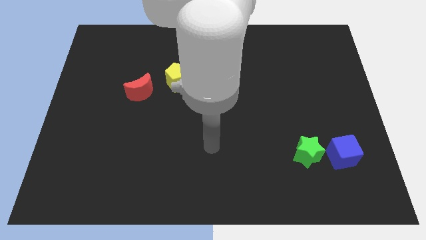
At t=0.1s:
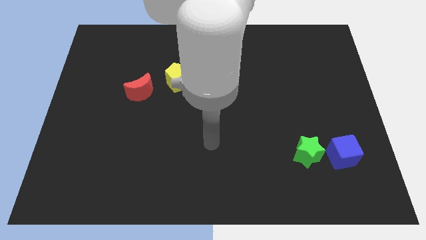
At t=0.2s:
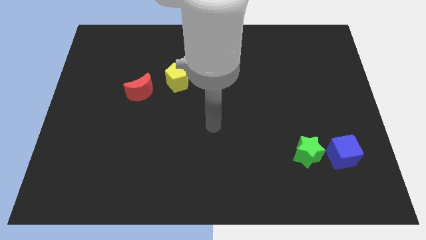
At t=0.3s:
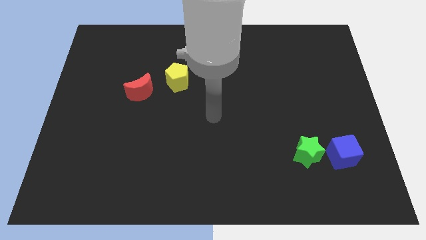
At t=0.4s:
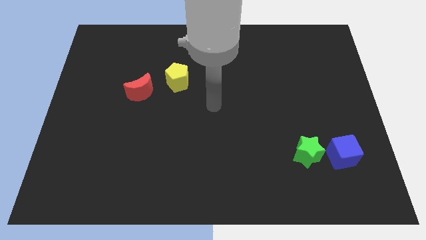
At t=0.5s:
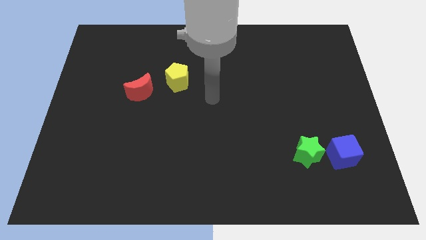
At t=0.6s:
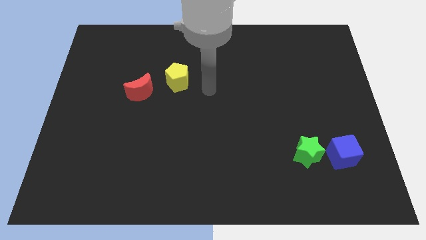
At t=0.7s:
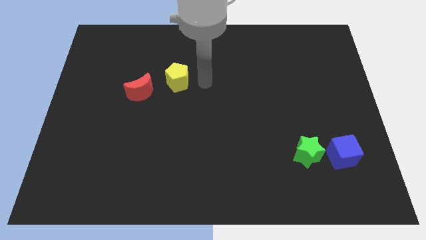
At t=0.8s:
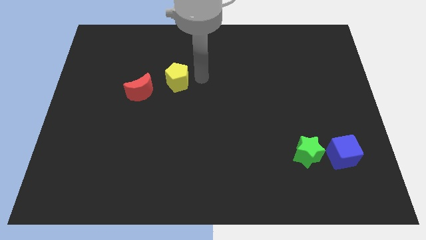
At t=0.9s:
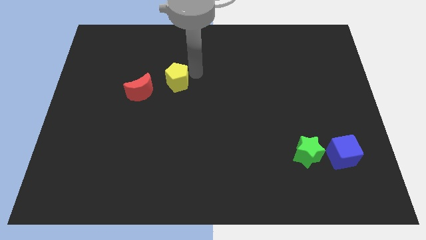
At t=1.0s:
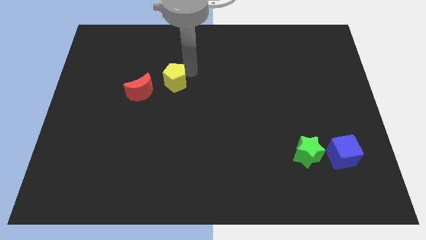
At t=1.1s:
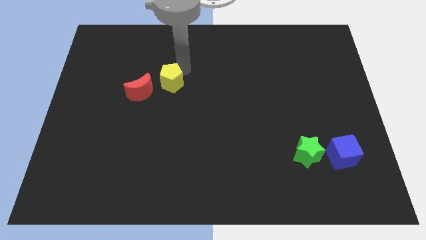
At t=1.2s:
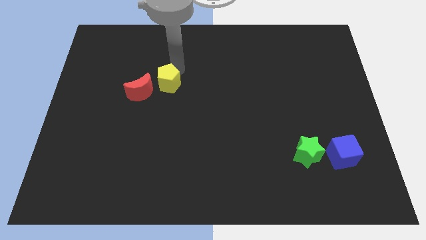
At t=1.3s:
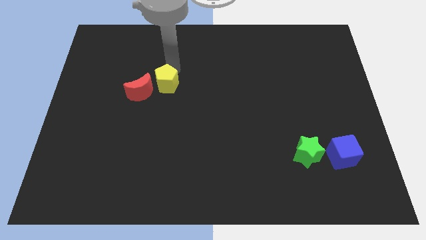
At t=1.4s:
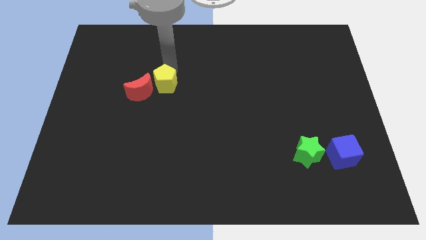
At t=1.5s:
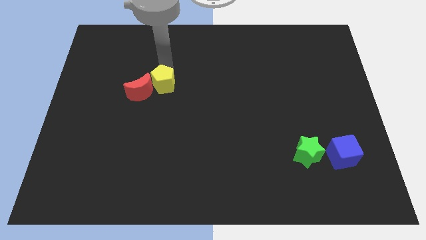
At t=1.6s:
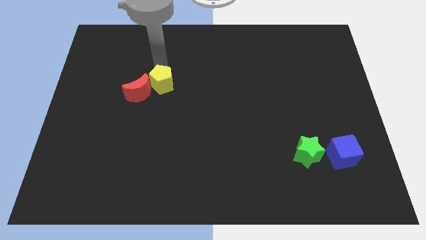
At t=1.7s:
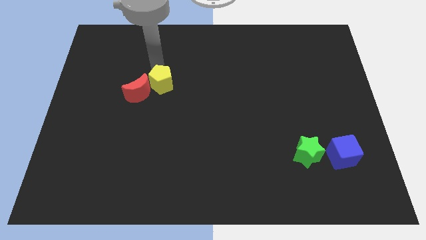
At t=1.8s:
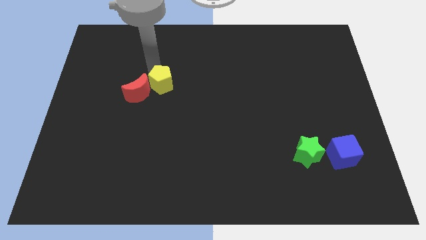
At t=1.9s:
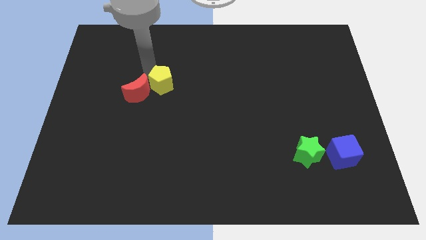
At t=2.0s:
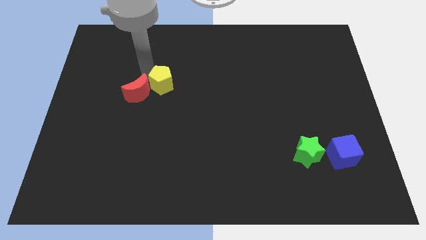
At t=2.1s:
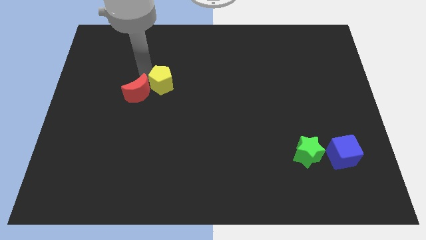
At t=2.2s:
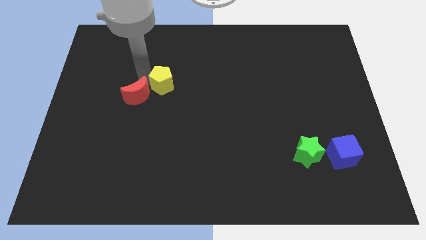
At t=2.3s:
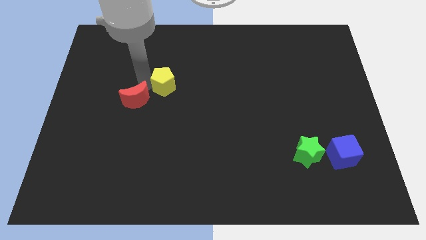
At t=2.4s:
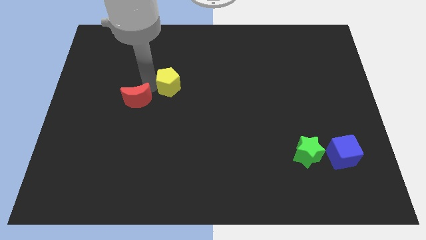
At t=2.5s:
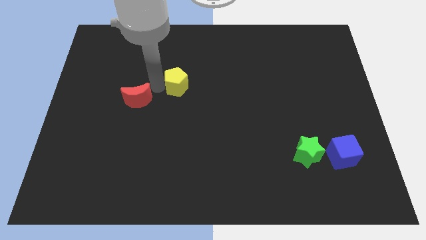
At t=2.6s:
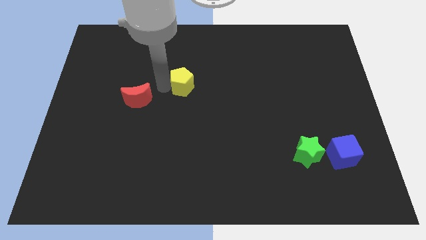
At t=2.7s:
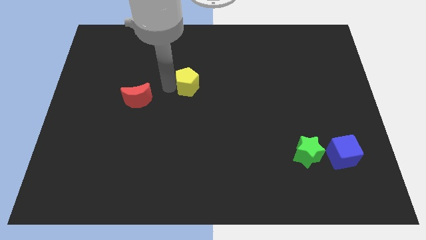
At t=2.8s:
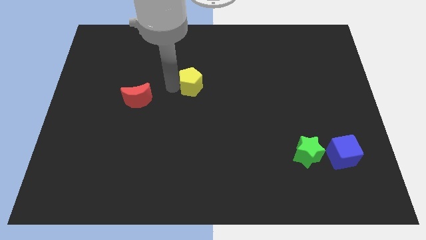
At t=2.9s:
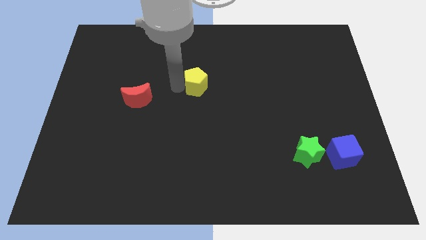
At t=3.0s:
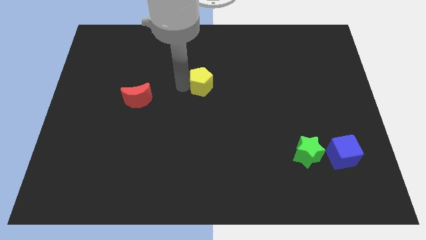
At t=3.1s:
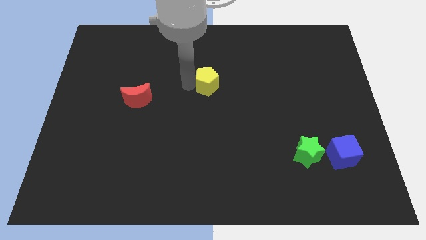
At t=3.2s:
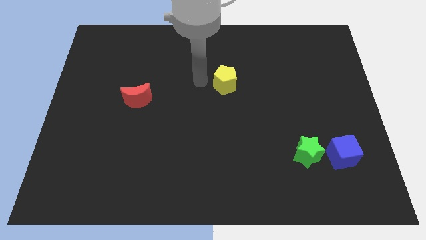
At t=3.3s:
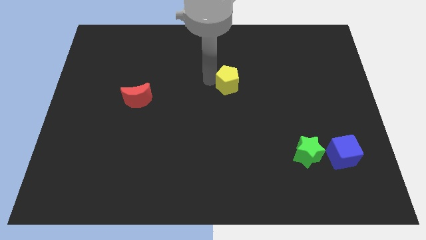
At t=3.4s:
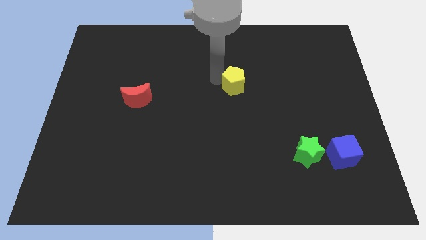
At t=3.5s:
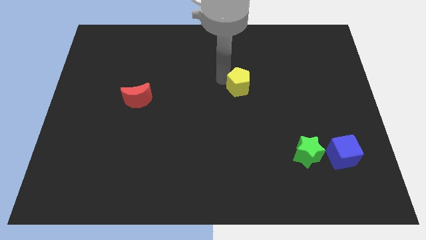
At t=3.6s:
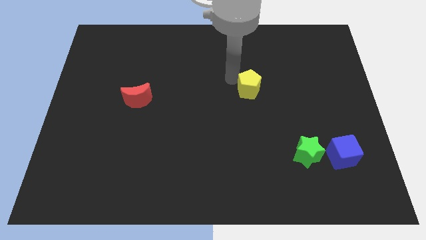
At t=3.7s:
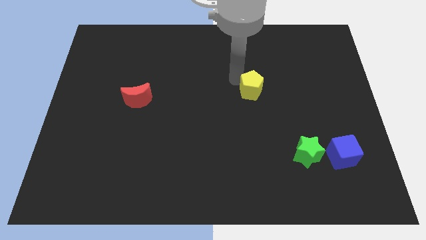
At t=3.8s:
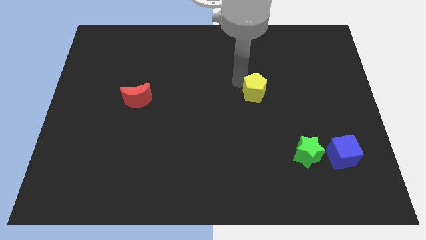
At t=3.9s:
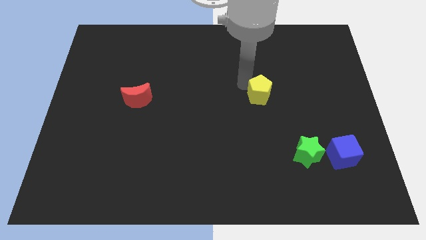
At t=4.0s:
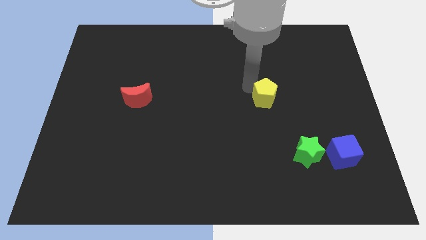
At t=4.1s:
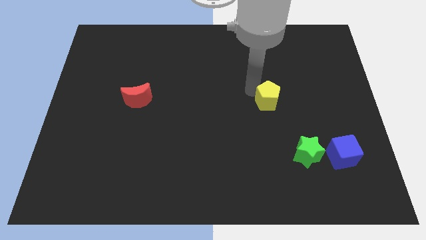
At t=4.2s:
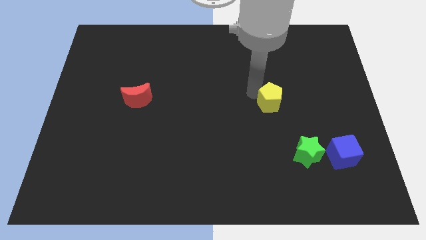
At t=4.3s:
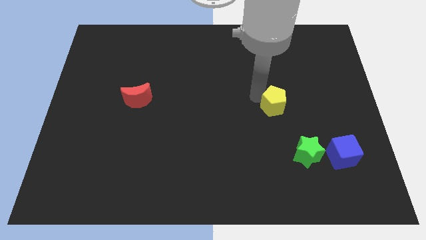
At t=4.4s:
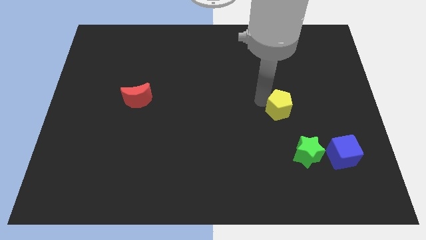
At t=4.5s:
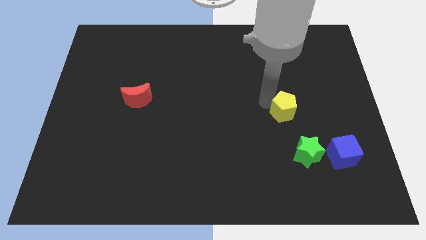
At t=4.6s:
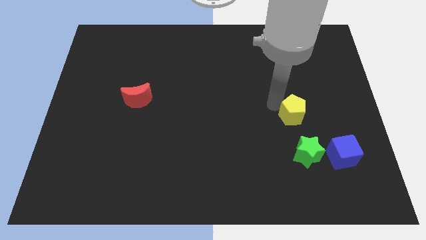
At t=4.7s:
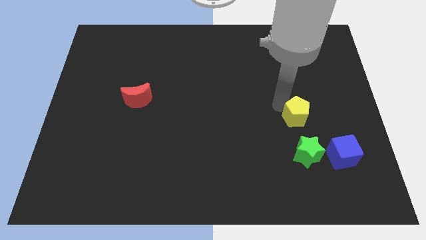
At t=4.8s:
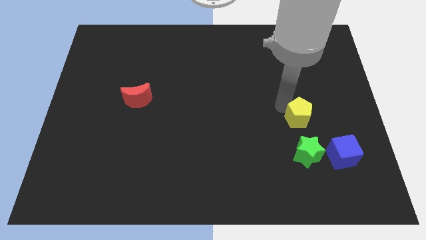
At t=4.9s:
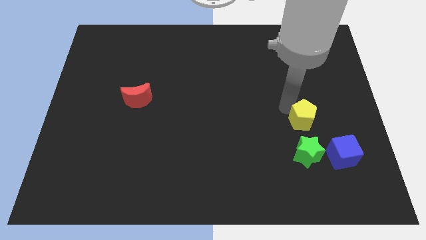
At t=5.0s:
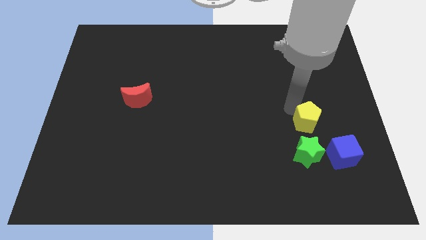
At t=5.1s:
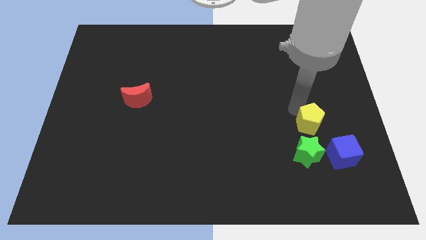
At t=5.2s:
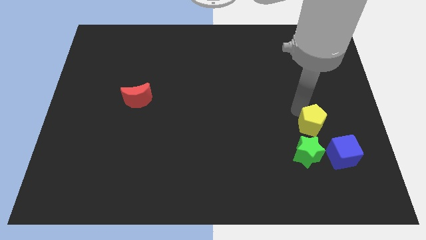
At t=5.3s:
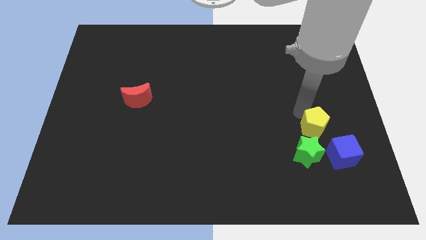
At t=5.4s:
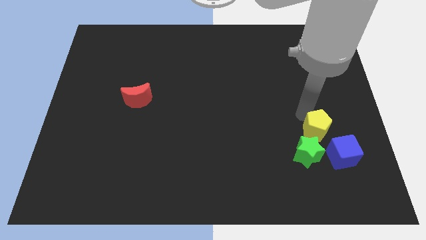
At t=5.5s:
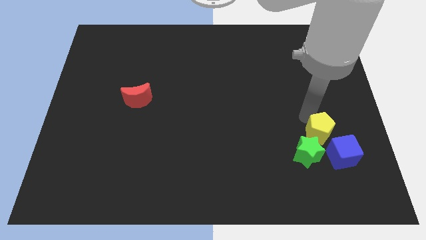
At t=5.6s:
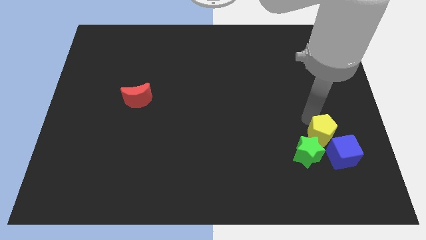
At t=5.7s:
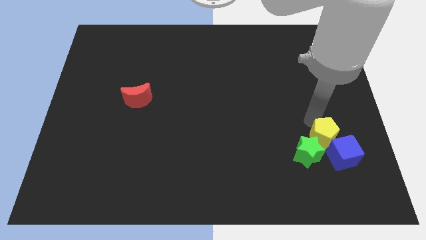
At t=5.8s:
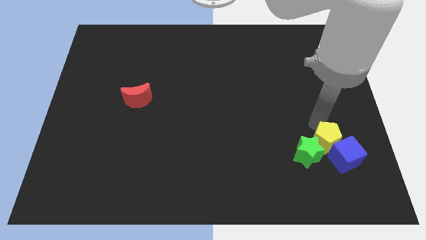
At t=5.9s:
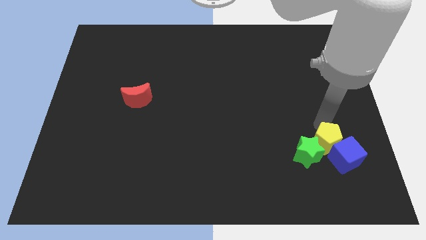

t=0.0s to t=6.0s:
push the pentagon close to the blue cube

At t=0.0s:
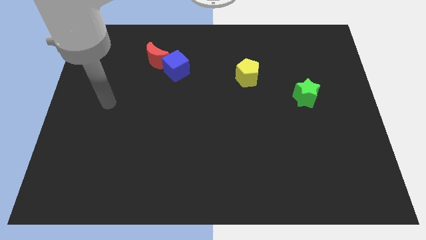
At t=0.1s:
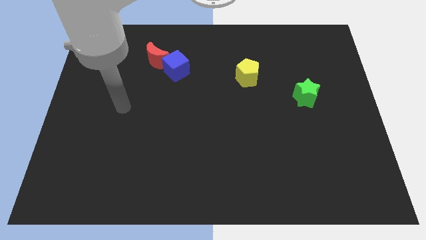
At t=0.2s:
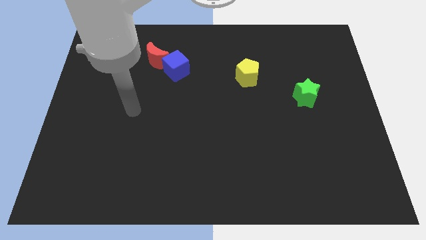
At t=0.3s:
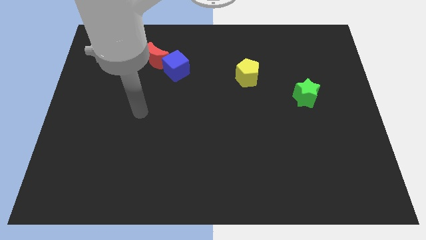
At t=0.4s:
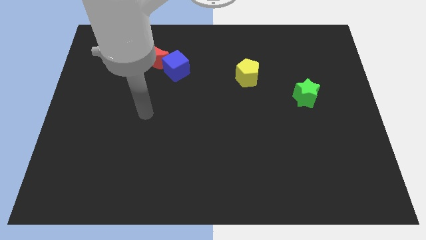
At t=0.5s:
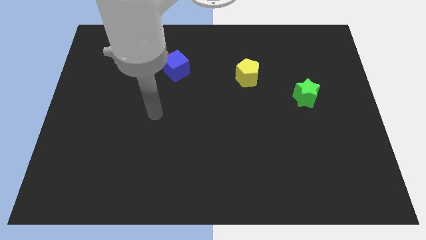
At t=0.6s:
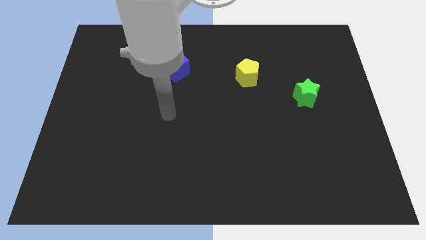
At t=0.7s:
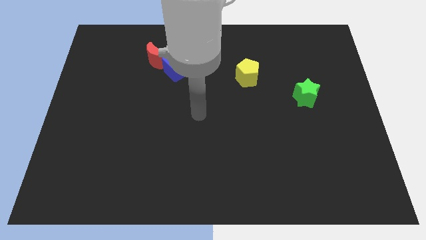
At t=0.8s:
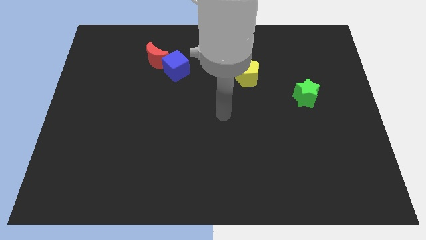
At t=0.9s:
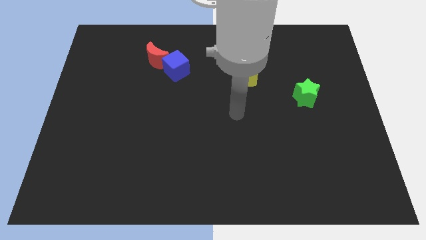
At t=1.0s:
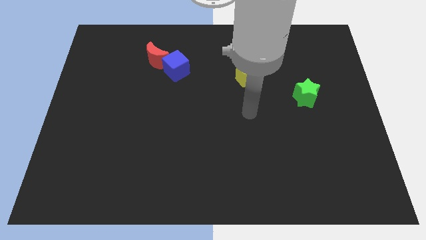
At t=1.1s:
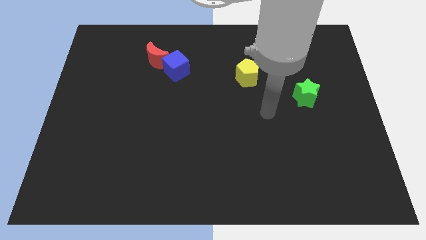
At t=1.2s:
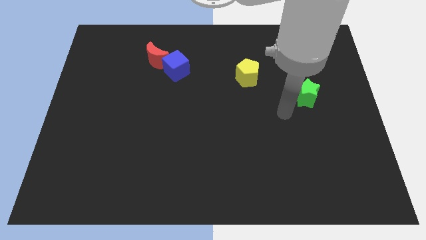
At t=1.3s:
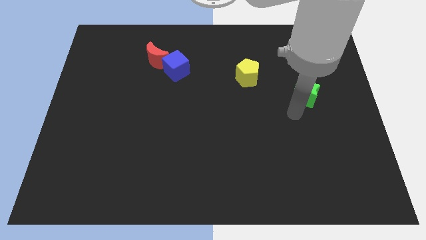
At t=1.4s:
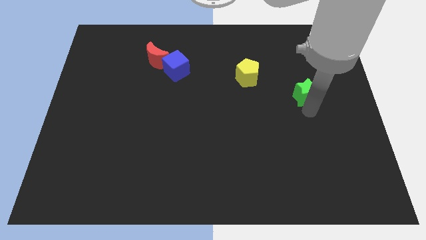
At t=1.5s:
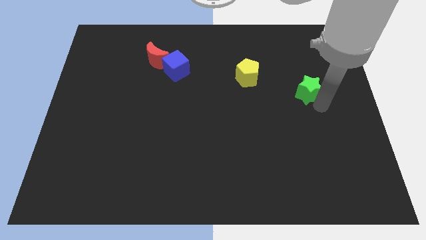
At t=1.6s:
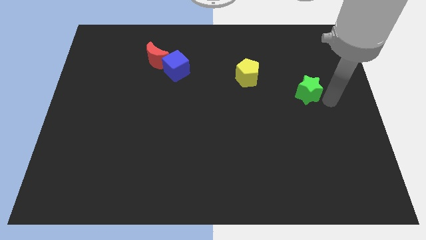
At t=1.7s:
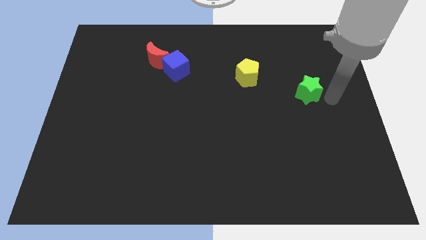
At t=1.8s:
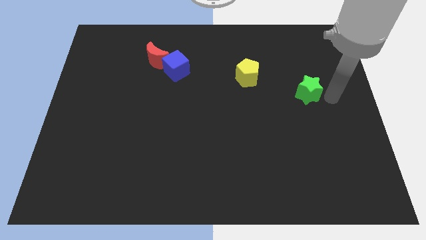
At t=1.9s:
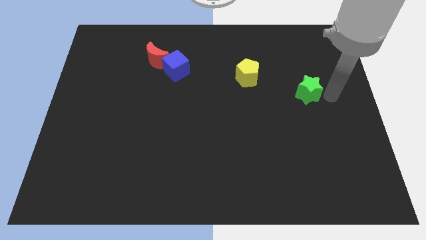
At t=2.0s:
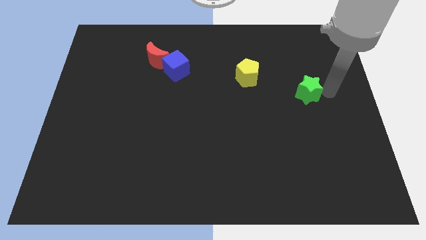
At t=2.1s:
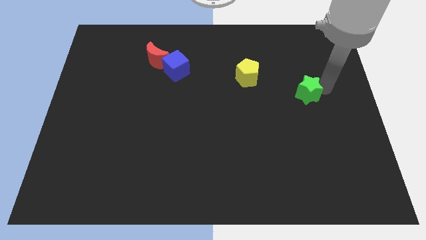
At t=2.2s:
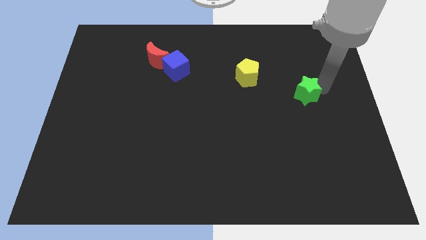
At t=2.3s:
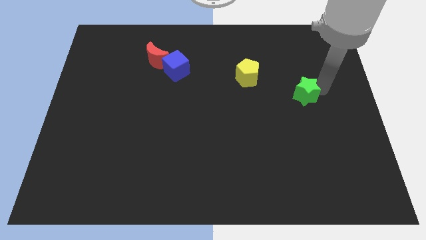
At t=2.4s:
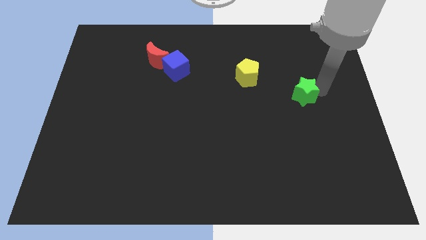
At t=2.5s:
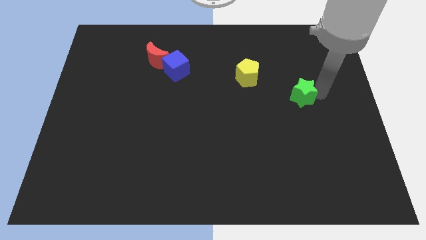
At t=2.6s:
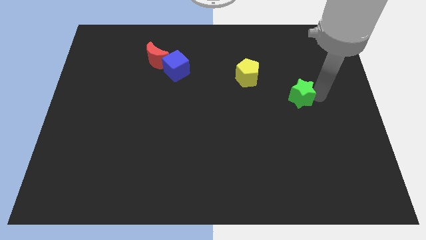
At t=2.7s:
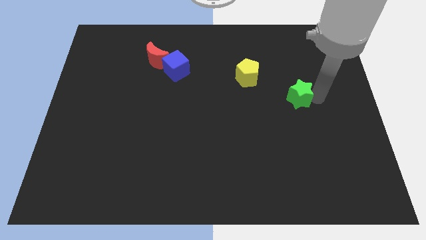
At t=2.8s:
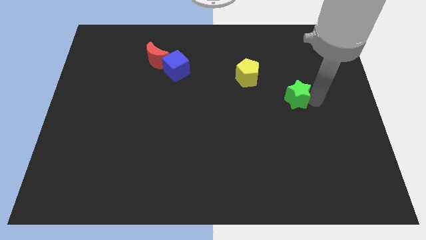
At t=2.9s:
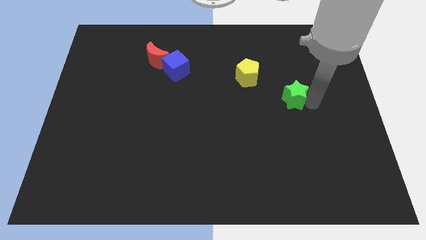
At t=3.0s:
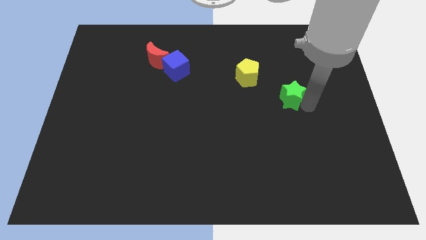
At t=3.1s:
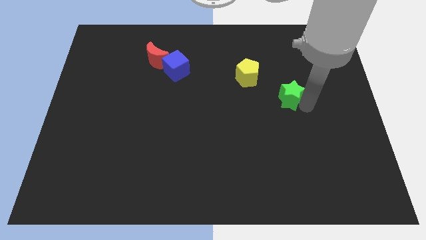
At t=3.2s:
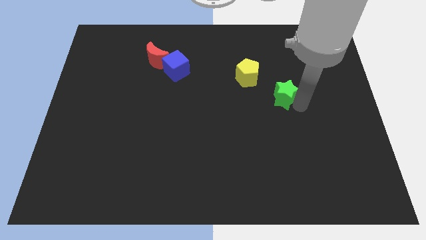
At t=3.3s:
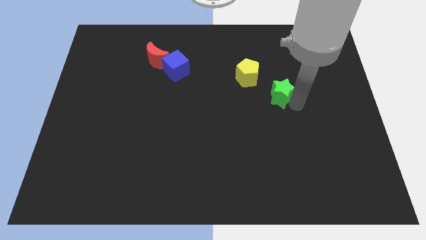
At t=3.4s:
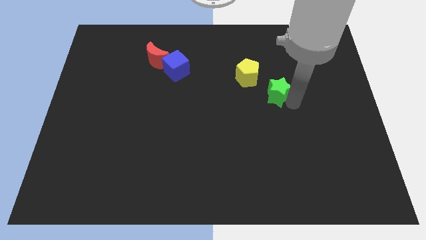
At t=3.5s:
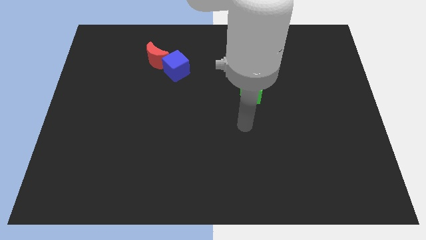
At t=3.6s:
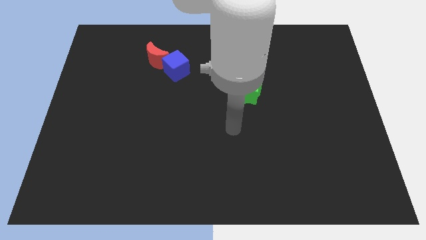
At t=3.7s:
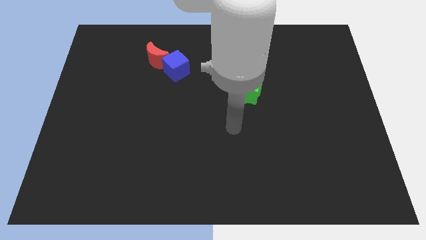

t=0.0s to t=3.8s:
slide the green block close to the yellow pentagon
